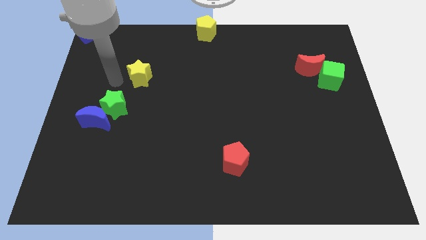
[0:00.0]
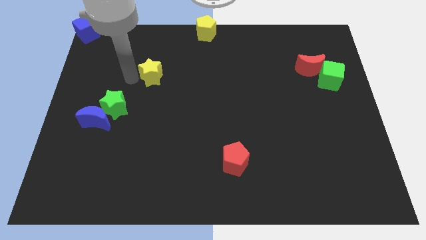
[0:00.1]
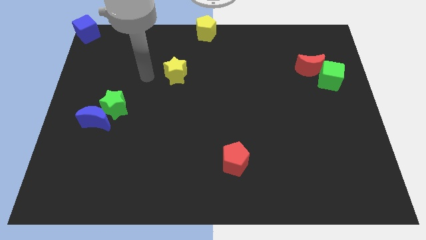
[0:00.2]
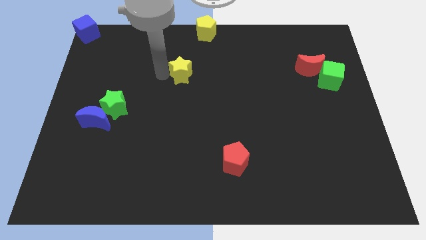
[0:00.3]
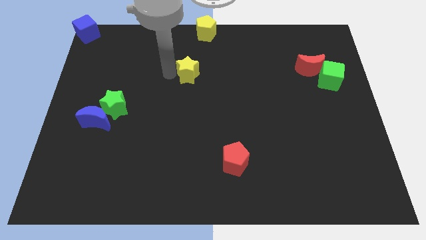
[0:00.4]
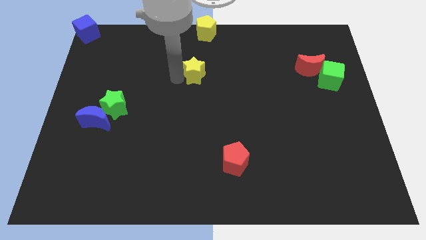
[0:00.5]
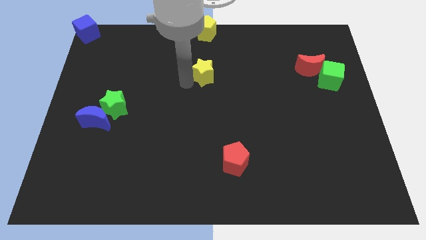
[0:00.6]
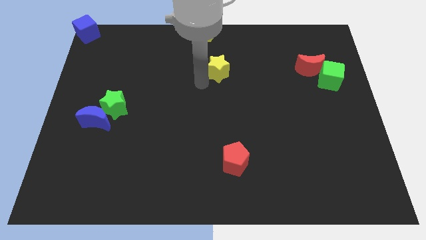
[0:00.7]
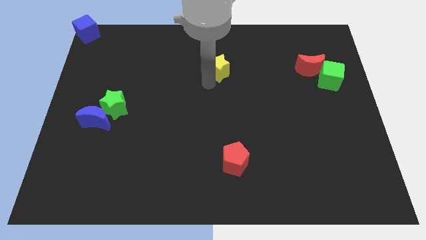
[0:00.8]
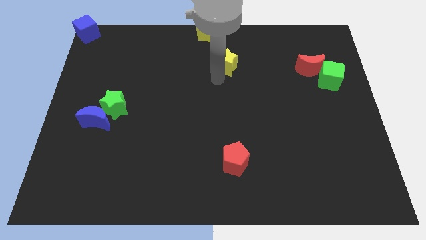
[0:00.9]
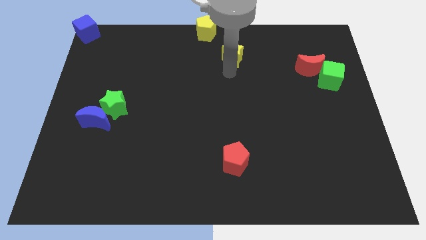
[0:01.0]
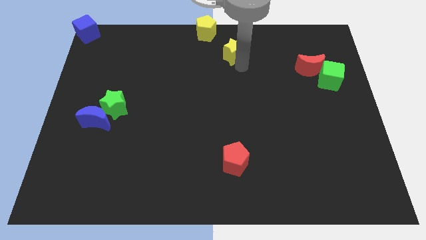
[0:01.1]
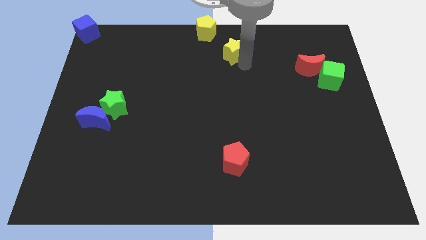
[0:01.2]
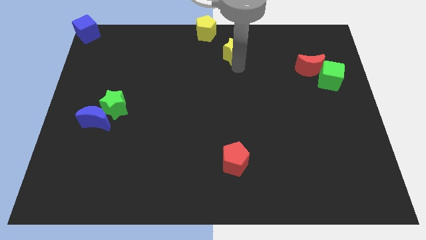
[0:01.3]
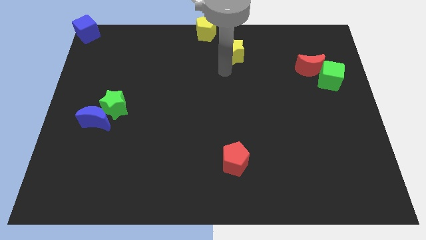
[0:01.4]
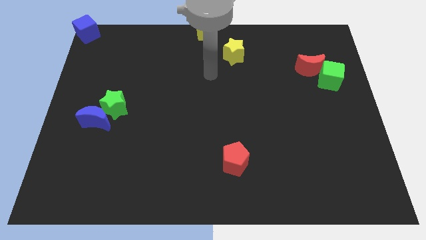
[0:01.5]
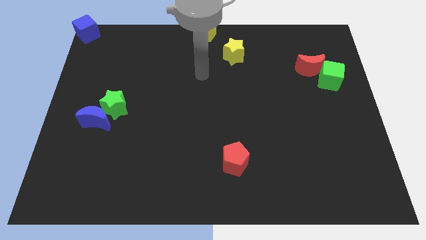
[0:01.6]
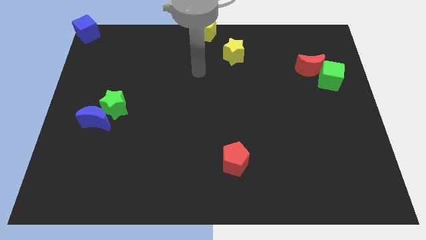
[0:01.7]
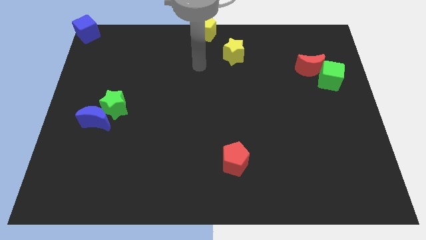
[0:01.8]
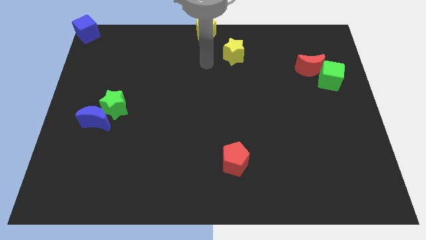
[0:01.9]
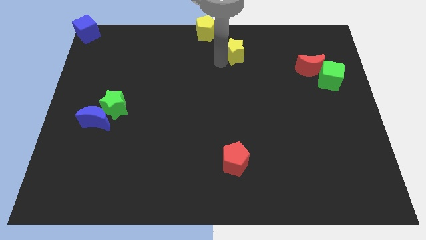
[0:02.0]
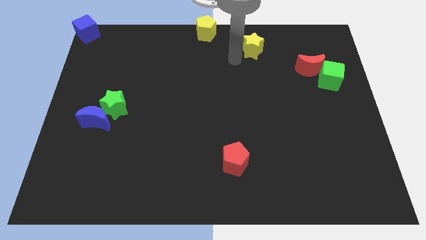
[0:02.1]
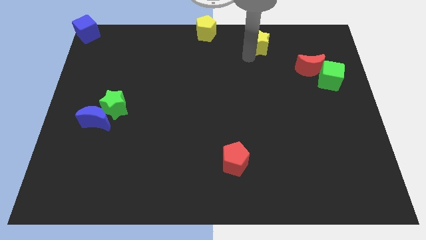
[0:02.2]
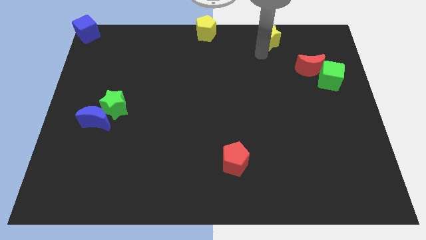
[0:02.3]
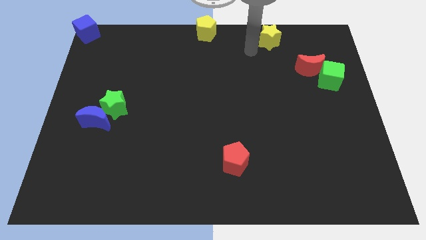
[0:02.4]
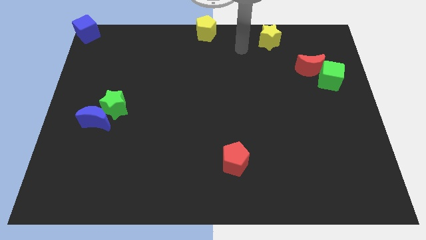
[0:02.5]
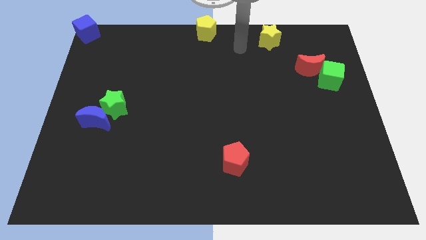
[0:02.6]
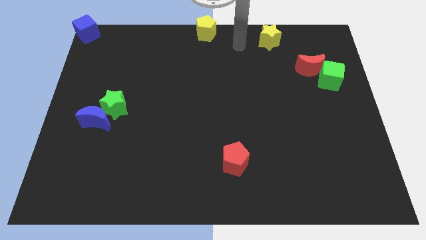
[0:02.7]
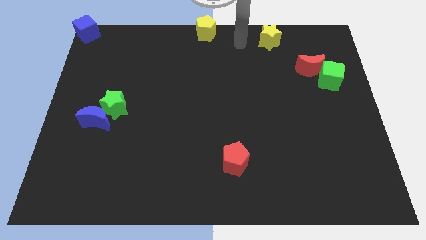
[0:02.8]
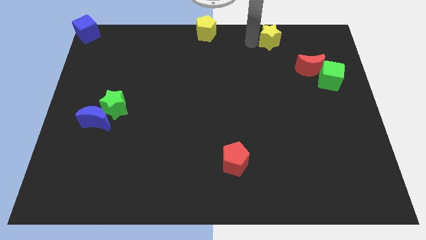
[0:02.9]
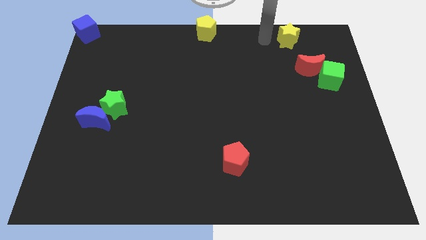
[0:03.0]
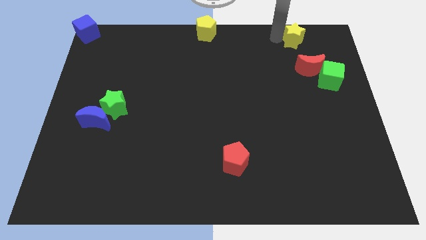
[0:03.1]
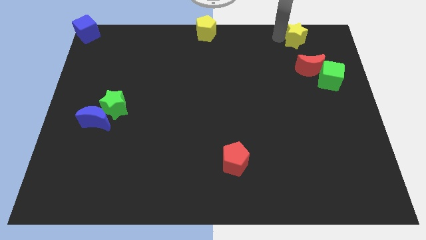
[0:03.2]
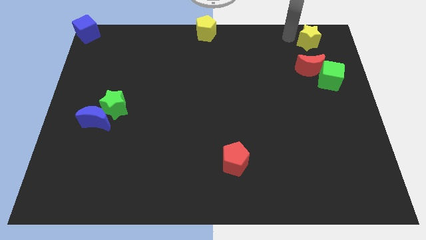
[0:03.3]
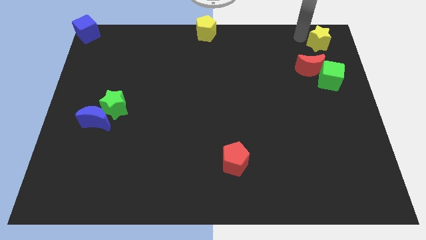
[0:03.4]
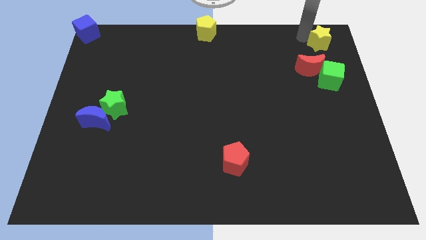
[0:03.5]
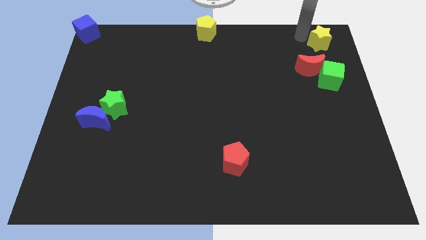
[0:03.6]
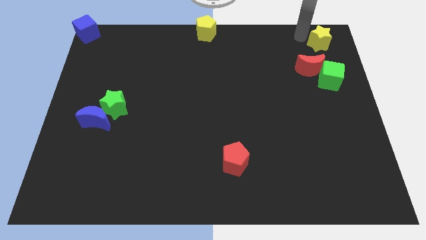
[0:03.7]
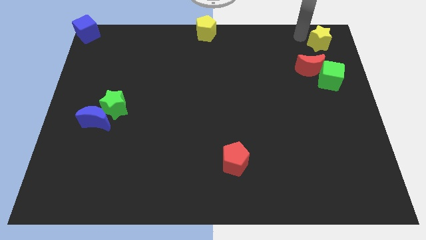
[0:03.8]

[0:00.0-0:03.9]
place the yellow star on top of green cube

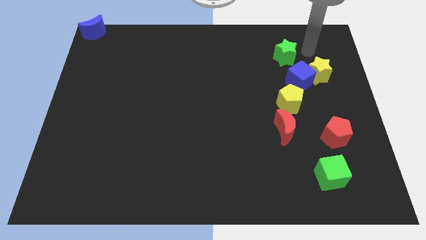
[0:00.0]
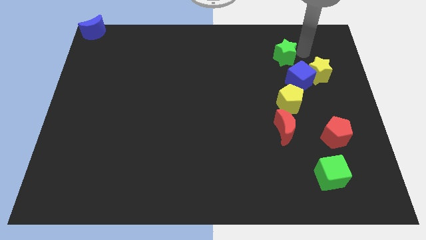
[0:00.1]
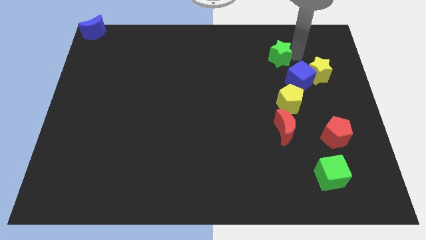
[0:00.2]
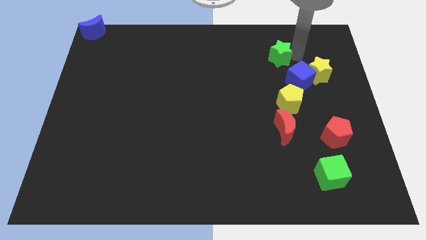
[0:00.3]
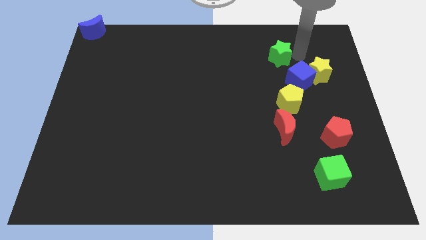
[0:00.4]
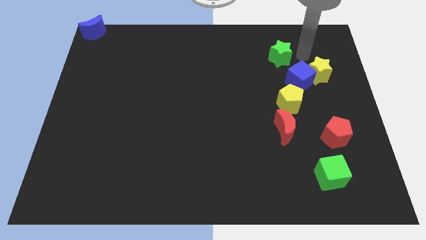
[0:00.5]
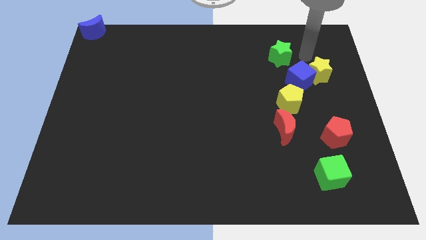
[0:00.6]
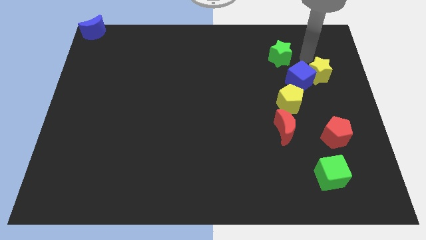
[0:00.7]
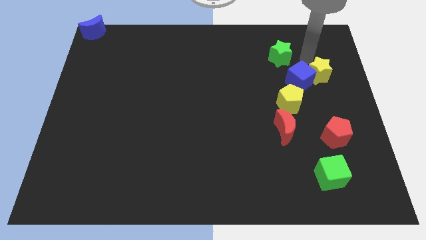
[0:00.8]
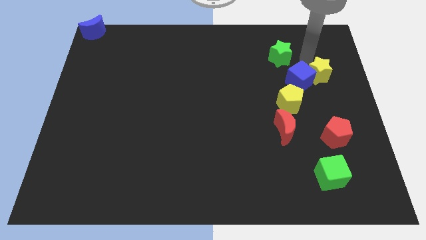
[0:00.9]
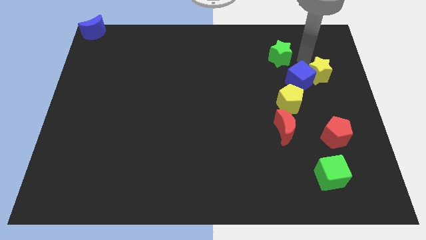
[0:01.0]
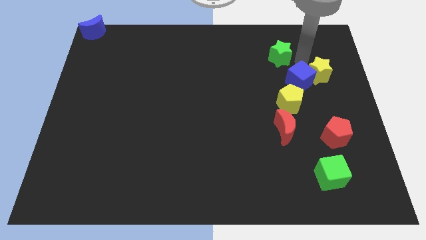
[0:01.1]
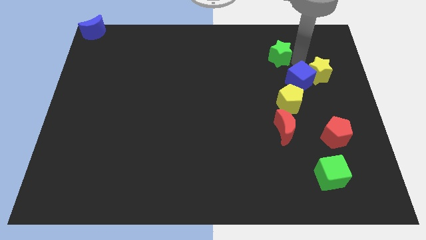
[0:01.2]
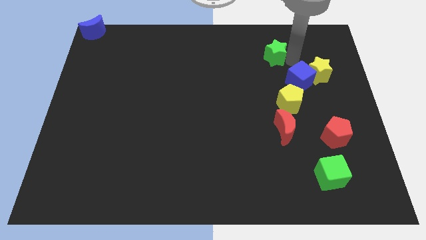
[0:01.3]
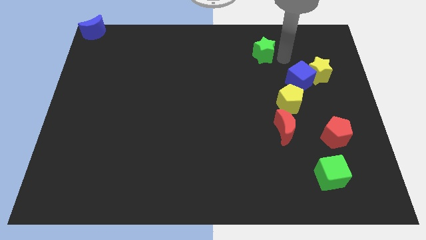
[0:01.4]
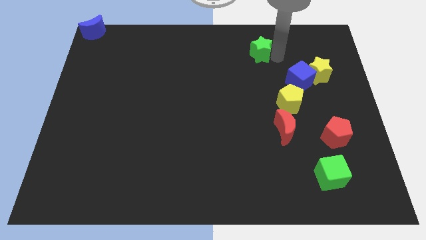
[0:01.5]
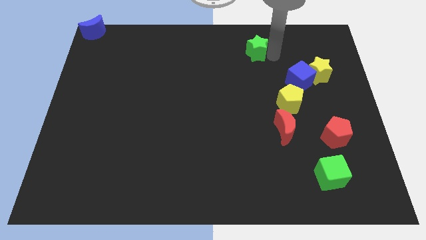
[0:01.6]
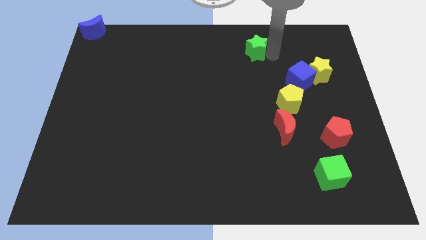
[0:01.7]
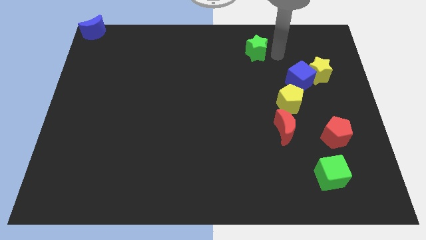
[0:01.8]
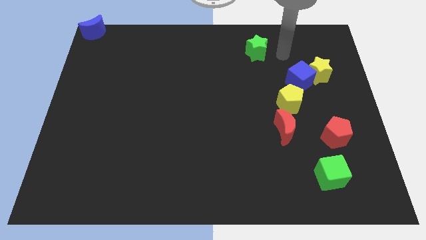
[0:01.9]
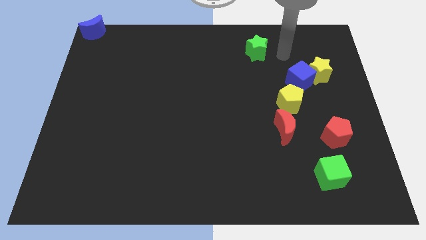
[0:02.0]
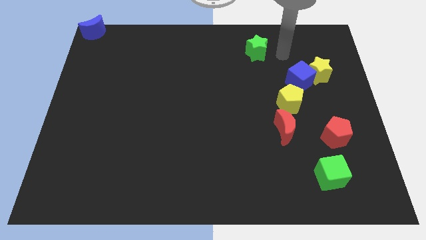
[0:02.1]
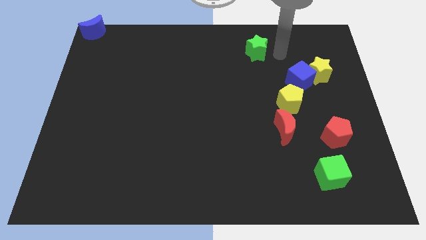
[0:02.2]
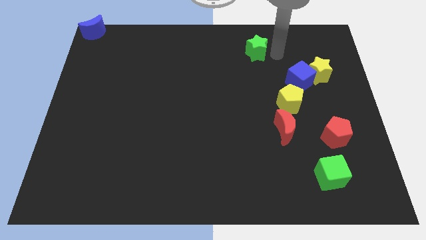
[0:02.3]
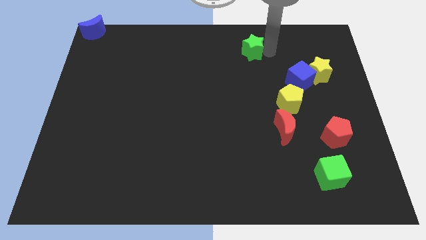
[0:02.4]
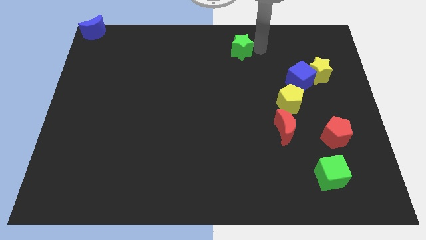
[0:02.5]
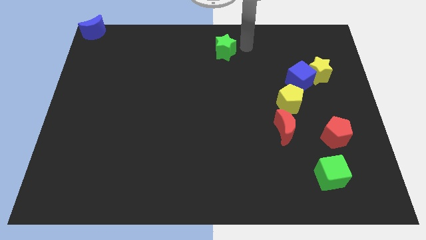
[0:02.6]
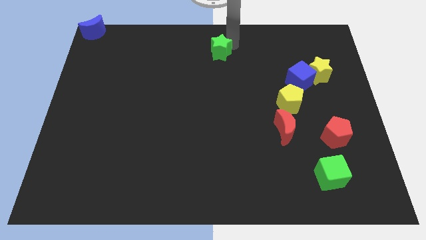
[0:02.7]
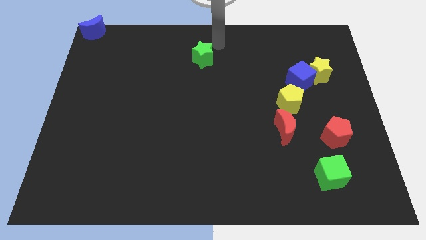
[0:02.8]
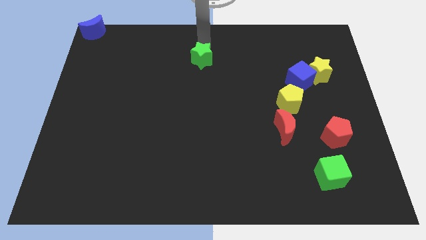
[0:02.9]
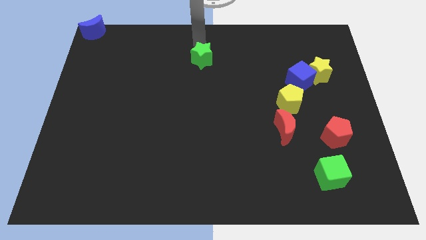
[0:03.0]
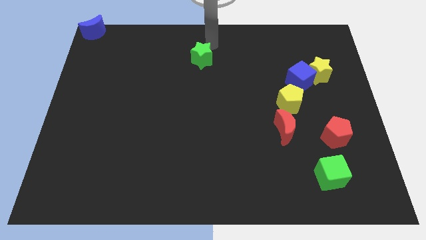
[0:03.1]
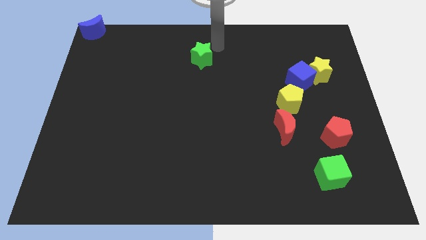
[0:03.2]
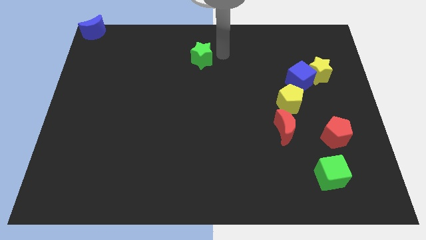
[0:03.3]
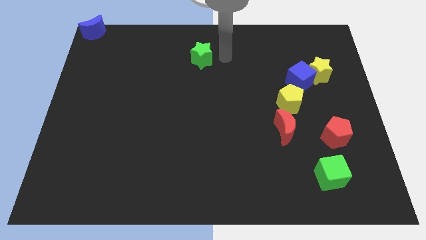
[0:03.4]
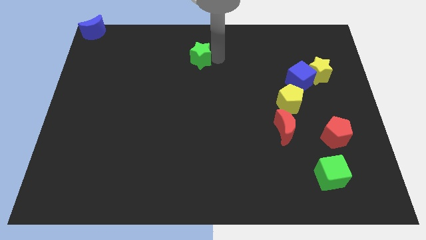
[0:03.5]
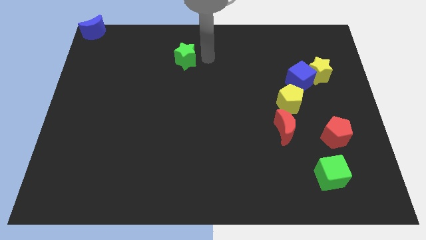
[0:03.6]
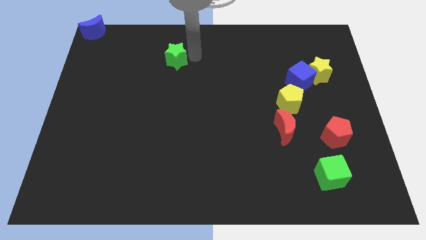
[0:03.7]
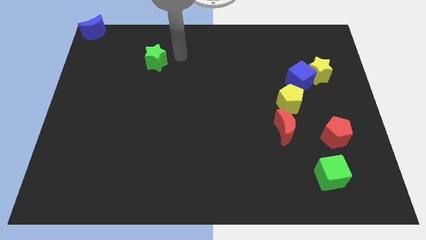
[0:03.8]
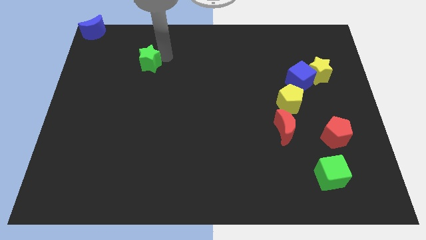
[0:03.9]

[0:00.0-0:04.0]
move the green star slightly to the left

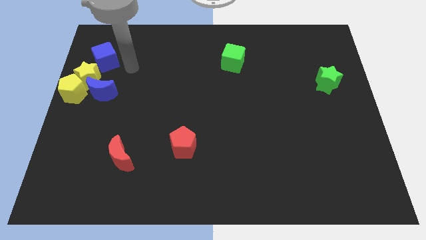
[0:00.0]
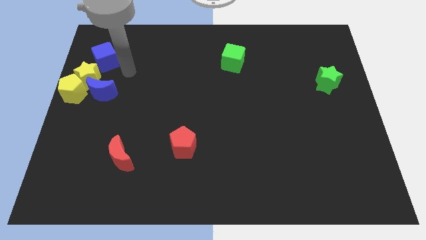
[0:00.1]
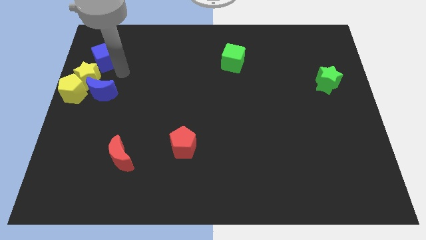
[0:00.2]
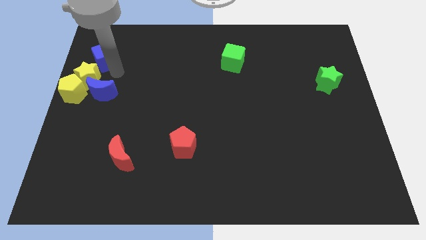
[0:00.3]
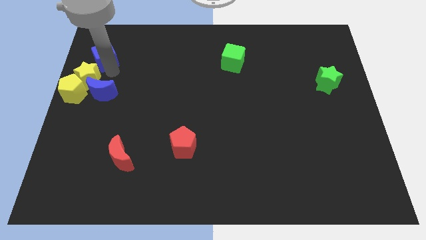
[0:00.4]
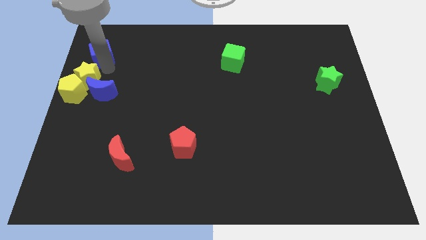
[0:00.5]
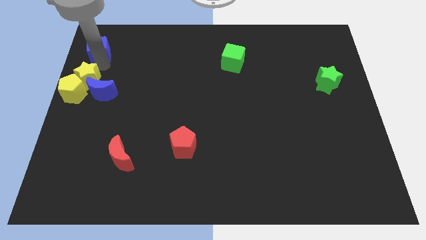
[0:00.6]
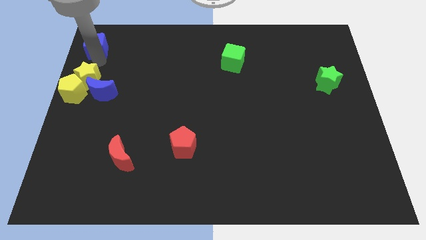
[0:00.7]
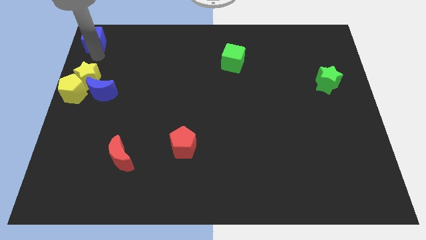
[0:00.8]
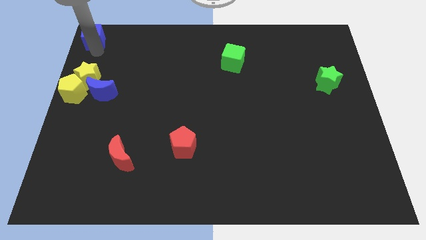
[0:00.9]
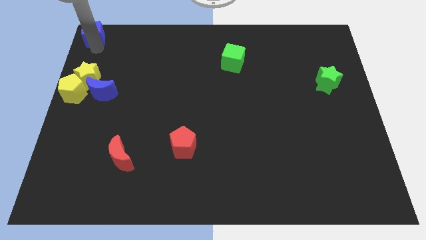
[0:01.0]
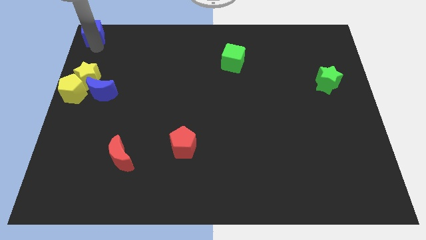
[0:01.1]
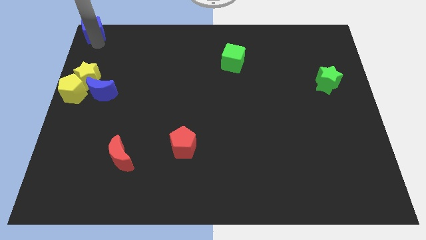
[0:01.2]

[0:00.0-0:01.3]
move blue cube at top left corner of board
